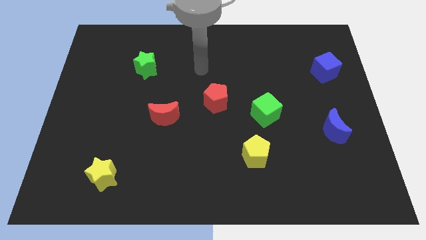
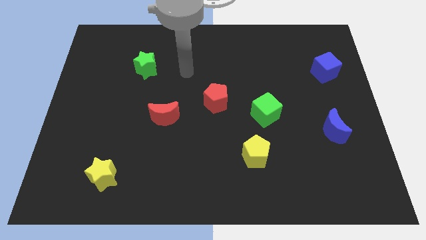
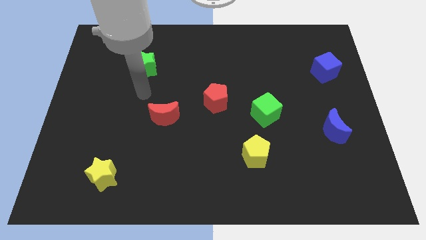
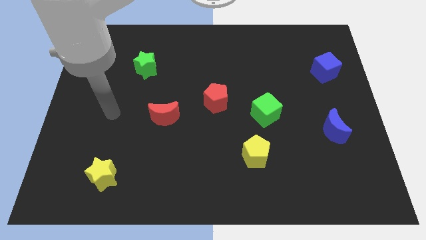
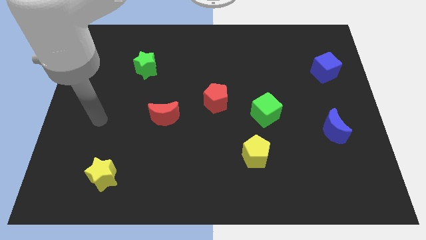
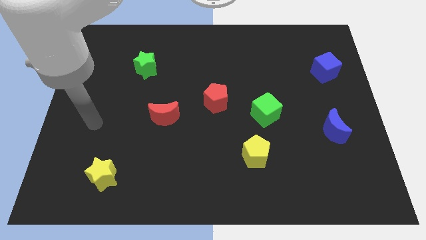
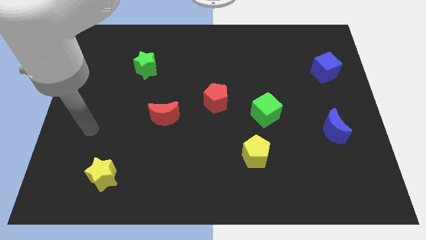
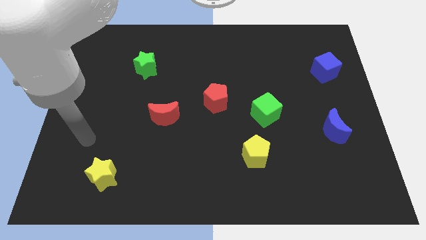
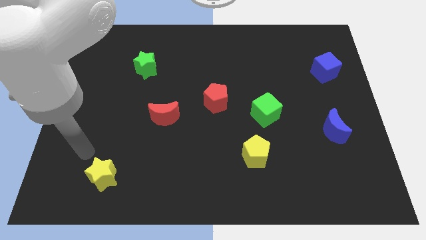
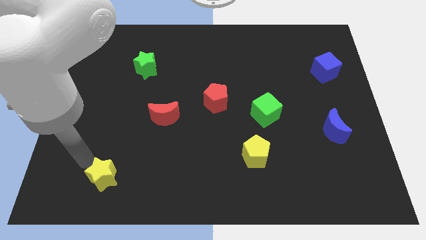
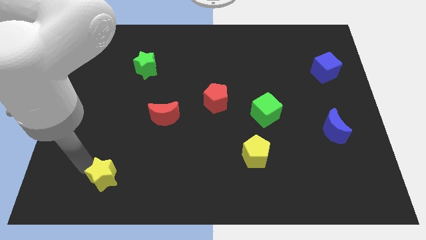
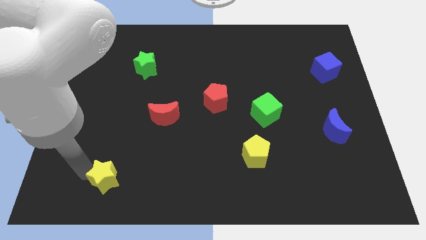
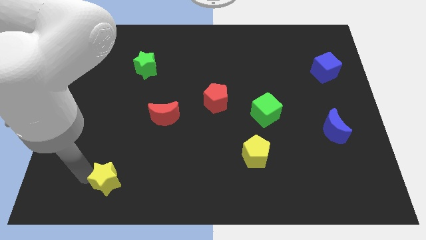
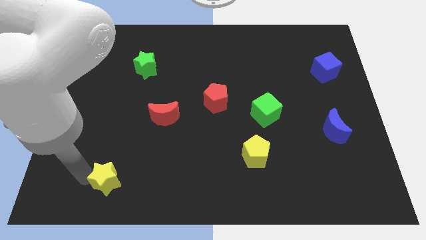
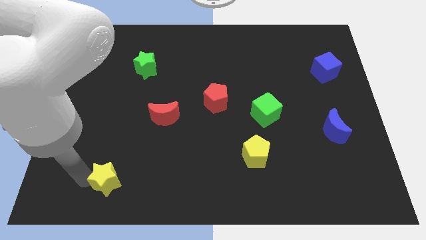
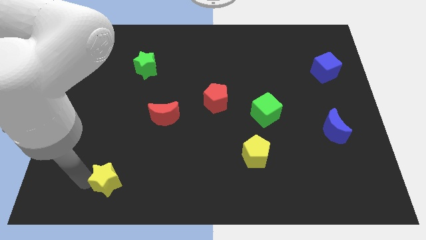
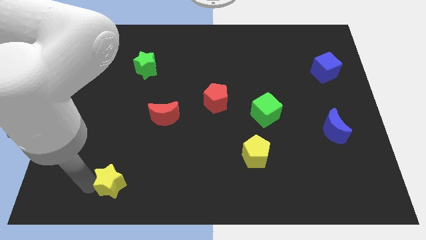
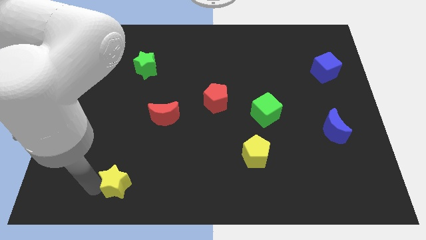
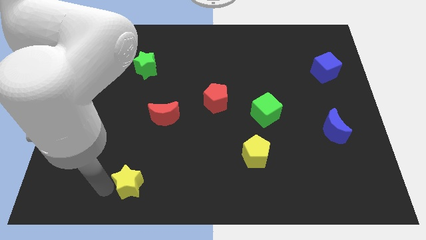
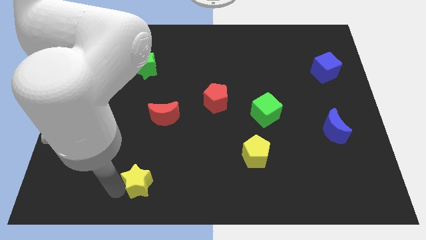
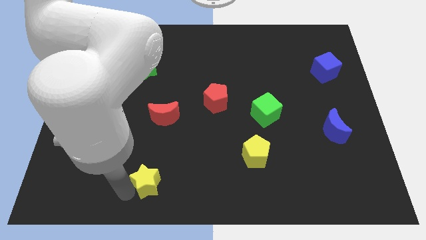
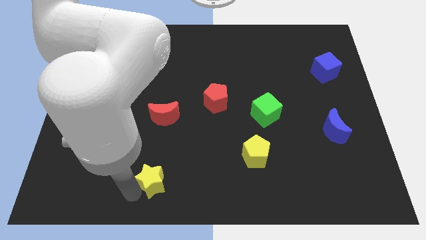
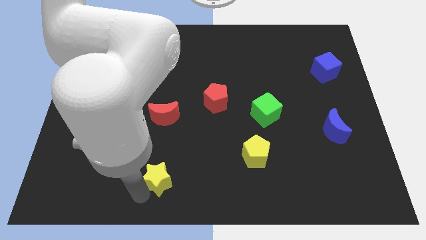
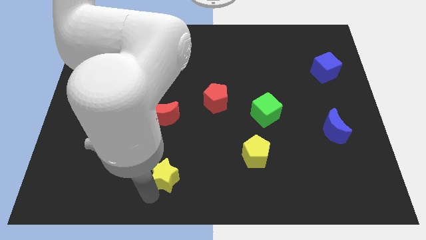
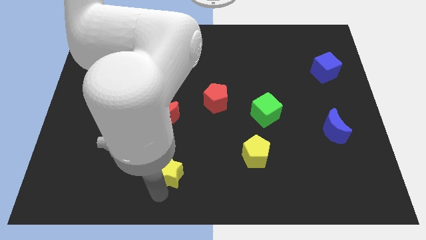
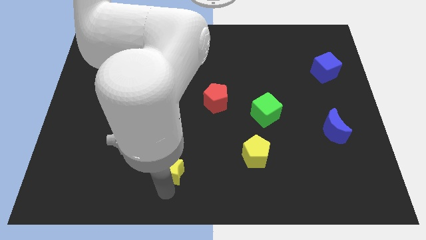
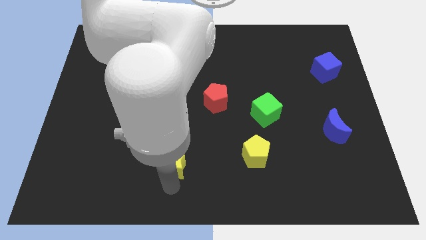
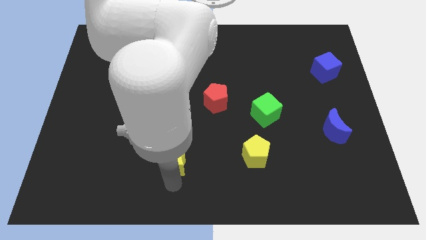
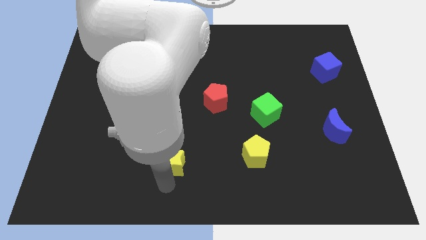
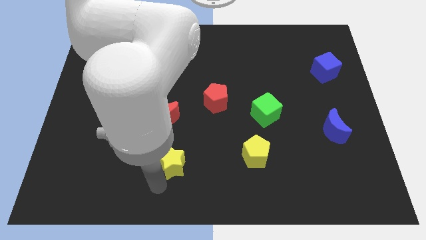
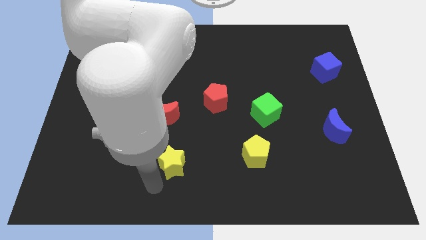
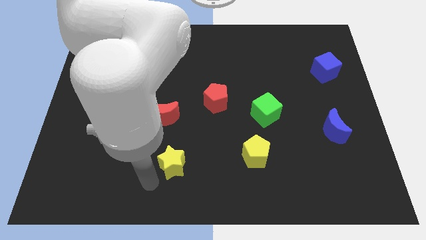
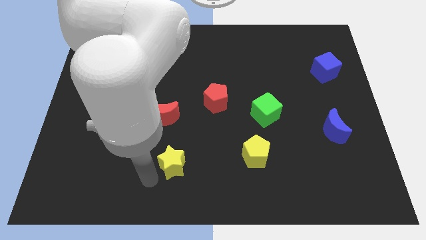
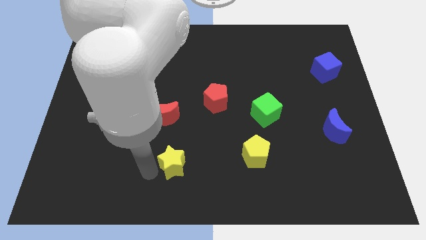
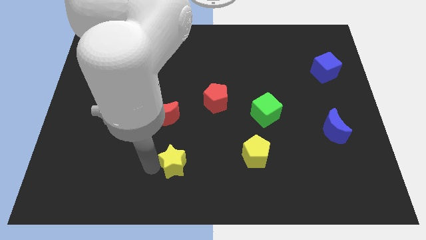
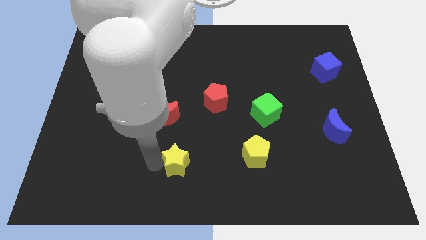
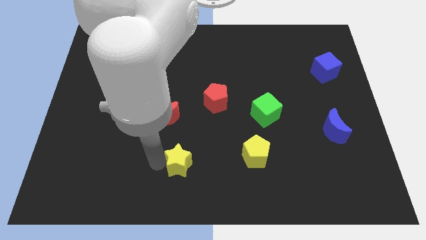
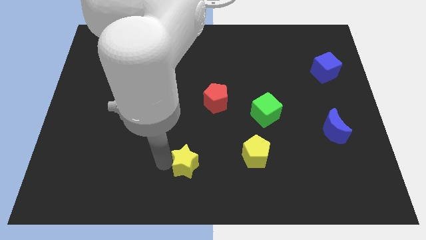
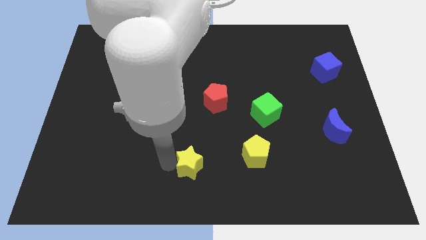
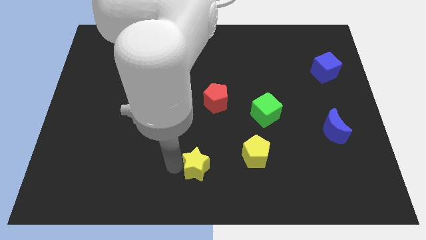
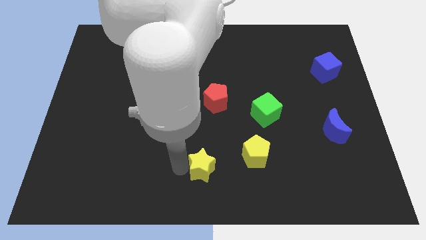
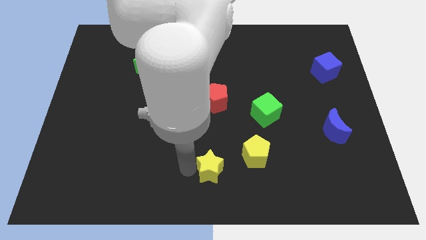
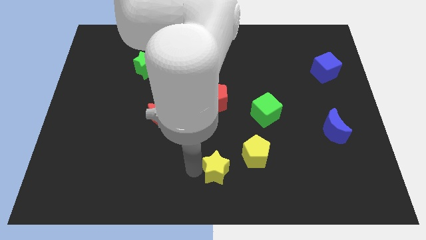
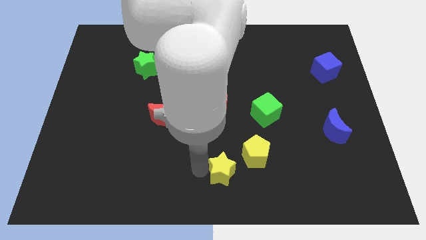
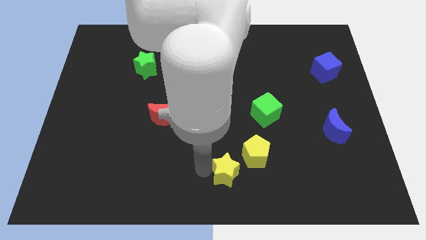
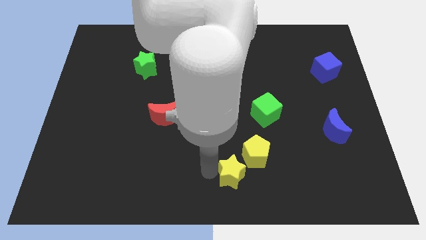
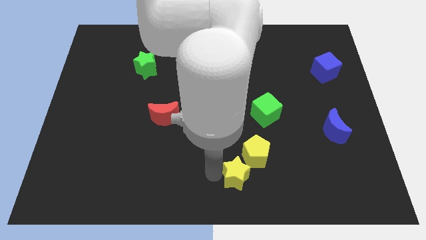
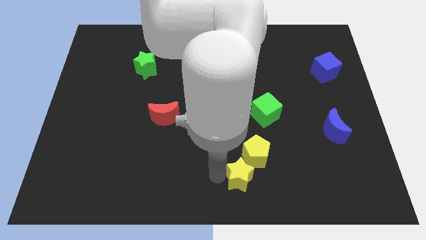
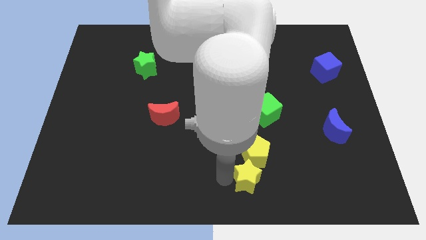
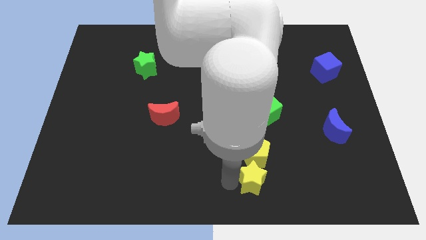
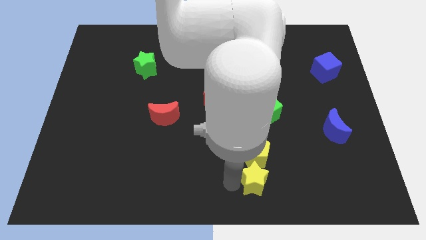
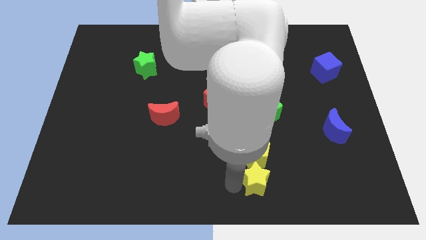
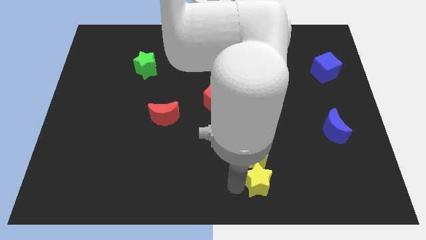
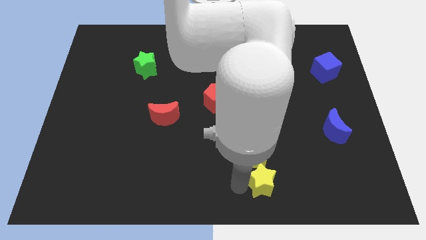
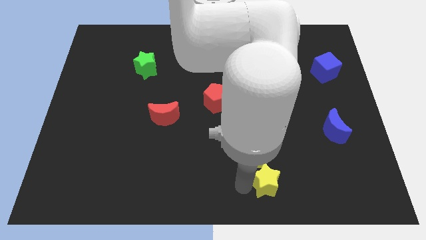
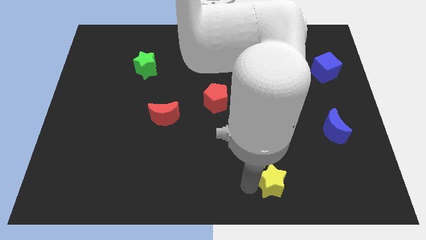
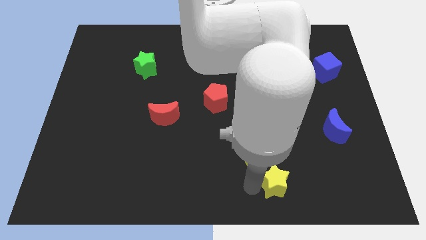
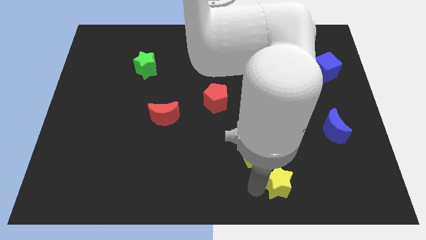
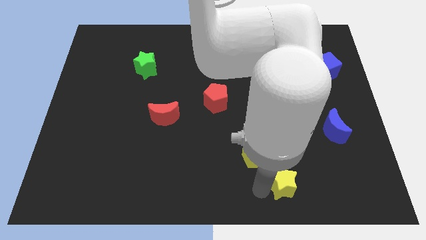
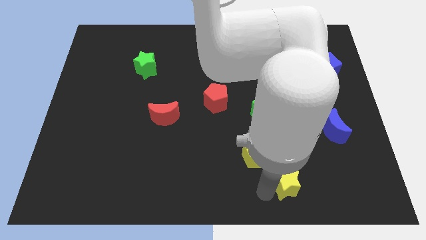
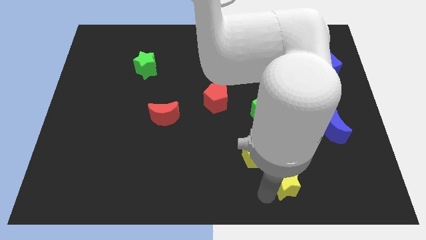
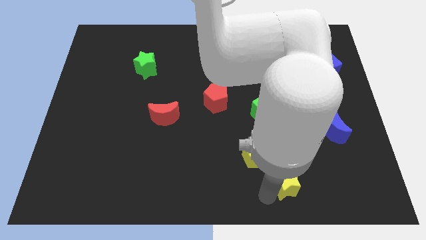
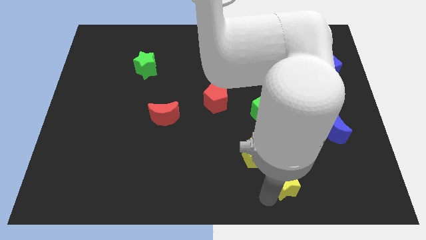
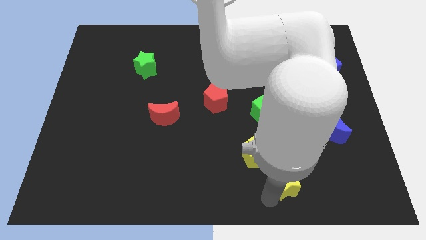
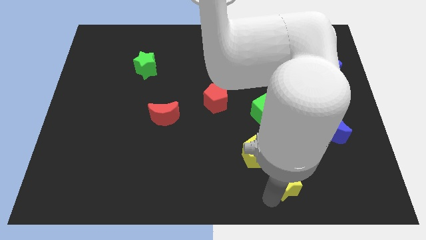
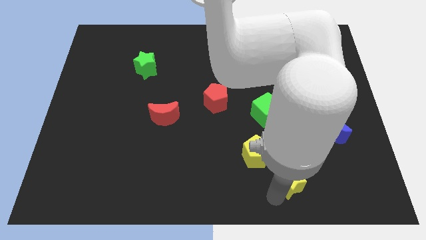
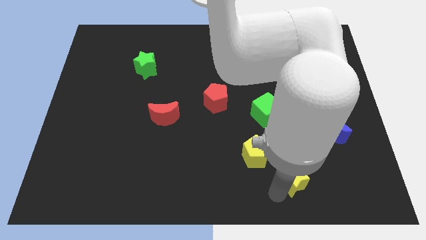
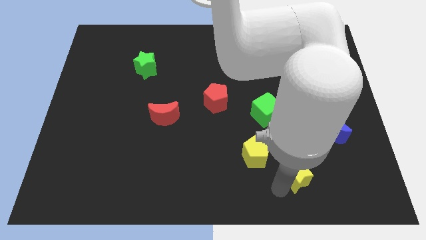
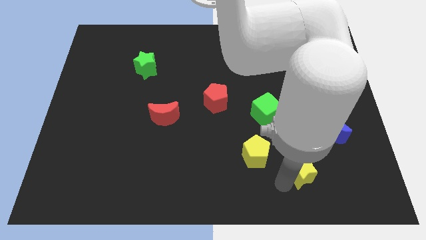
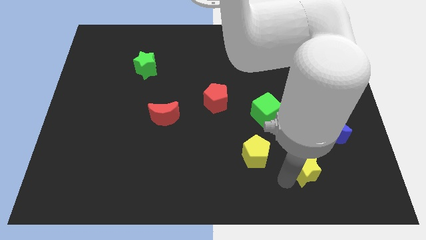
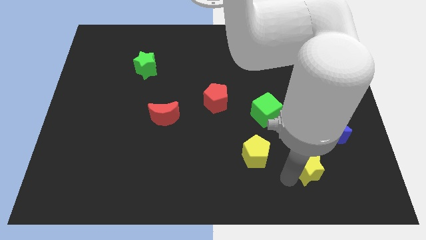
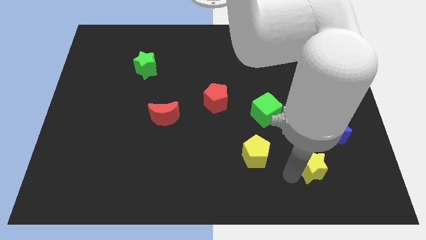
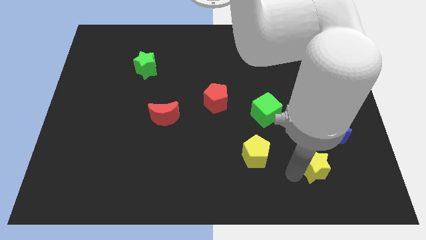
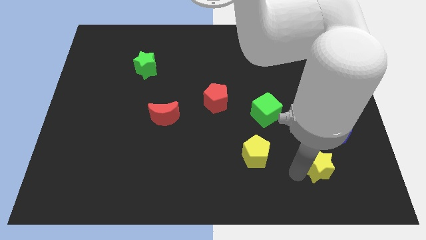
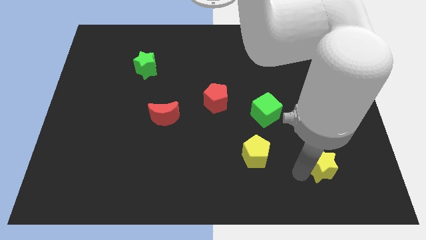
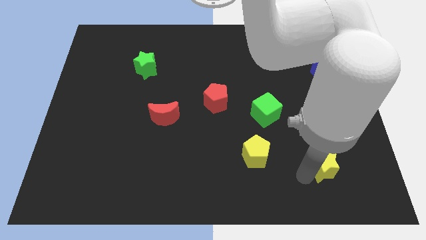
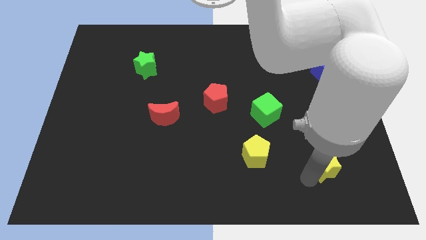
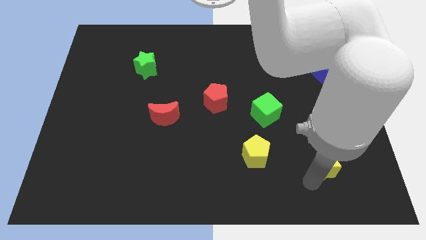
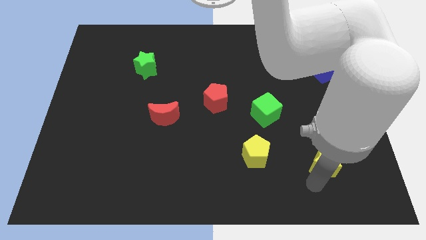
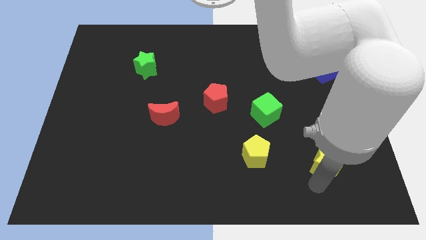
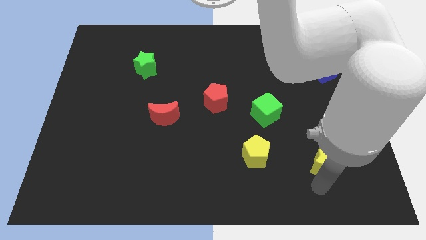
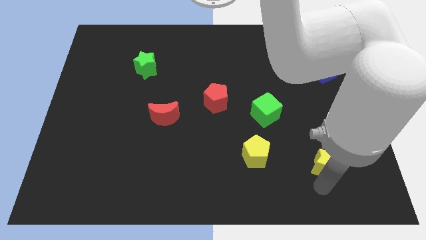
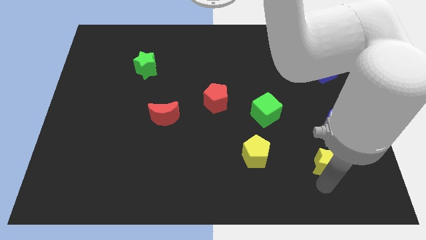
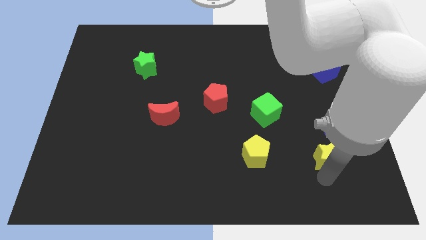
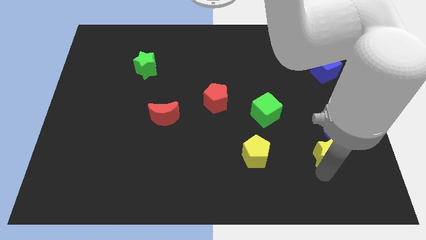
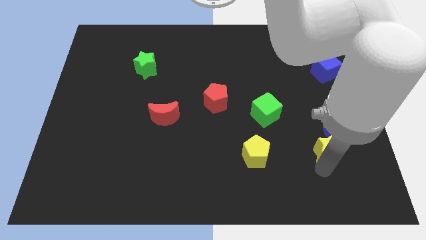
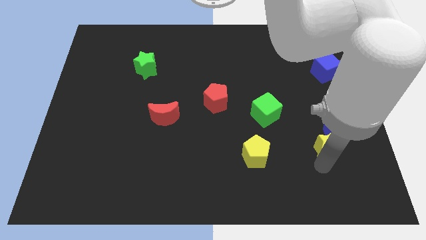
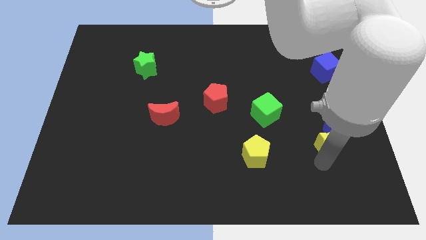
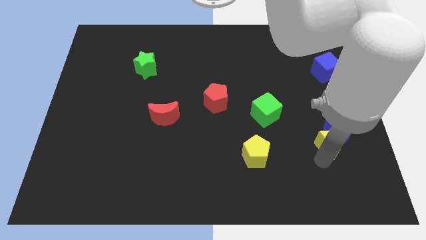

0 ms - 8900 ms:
push the yellow star next to the blue moon
